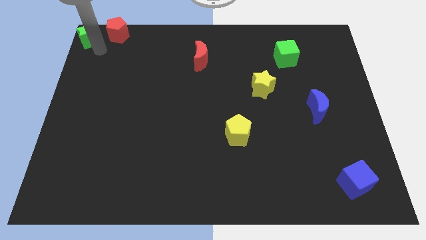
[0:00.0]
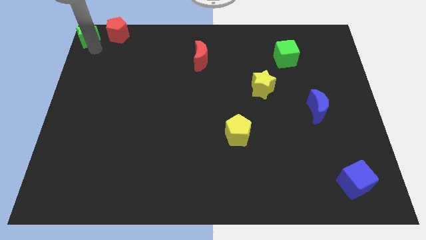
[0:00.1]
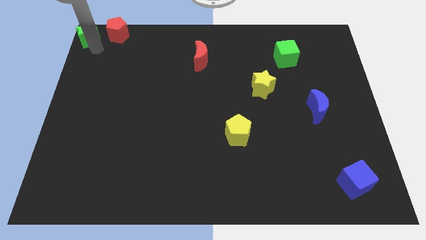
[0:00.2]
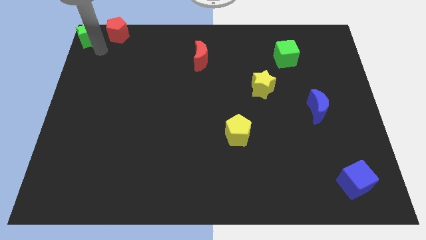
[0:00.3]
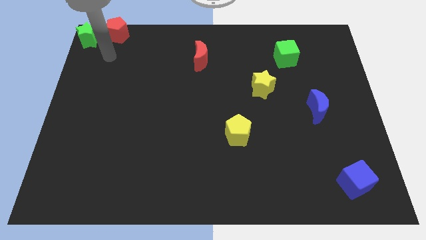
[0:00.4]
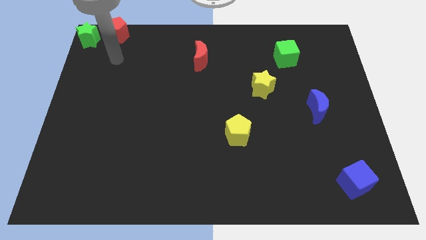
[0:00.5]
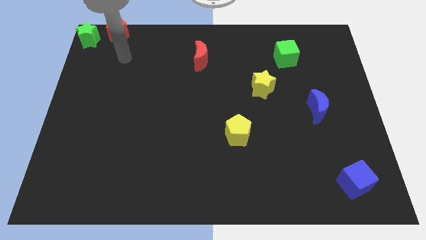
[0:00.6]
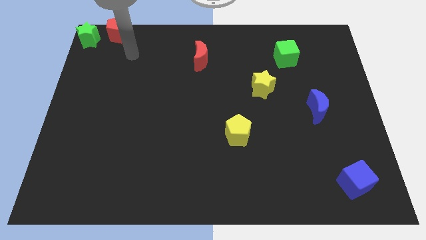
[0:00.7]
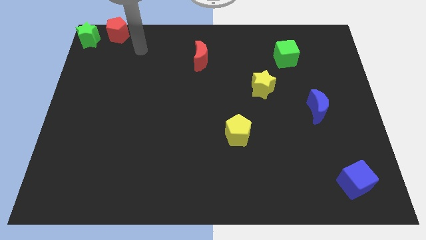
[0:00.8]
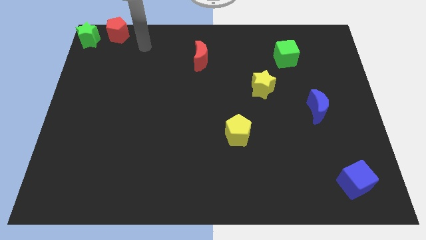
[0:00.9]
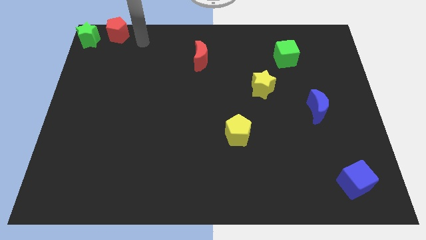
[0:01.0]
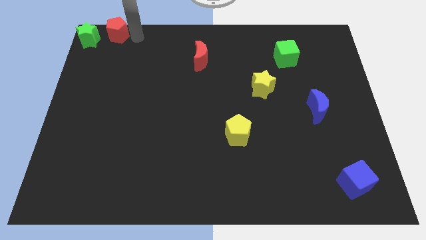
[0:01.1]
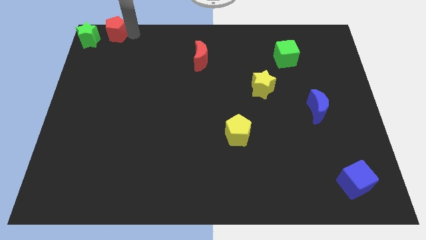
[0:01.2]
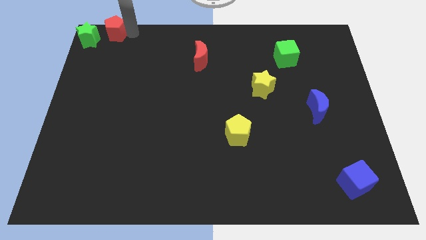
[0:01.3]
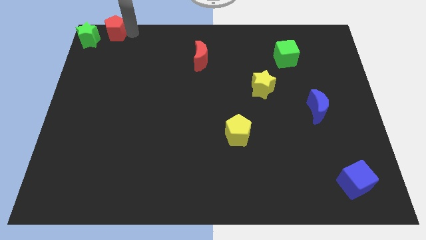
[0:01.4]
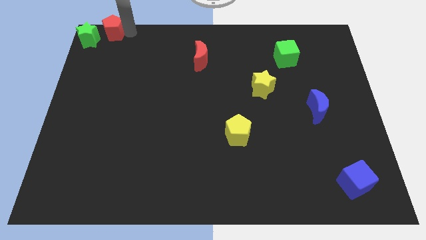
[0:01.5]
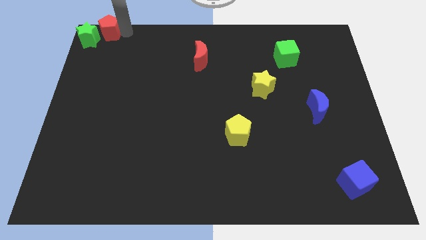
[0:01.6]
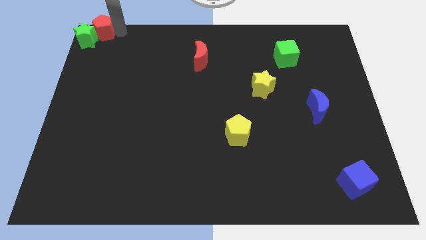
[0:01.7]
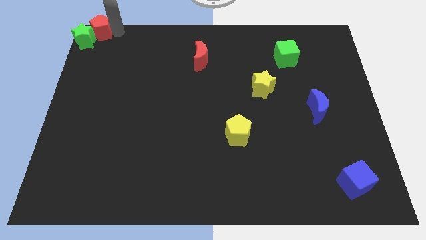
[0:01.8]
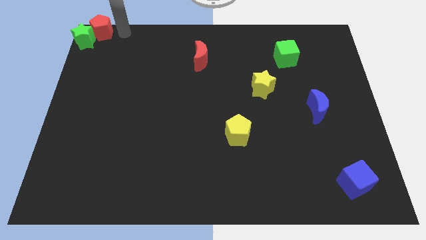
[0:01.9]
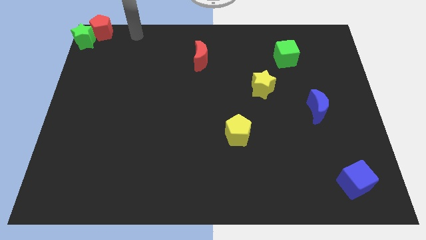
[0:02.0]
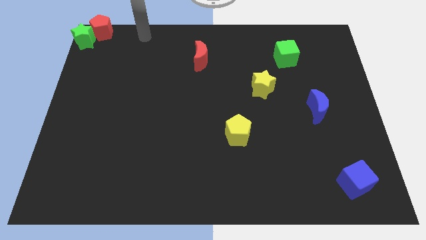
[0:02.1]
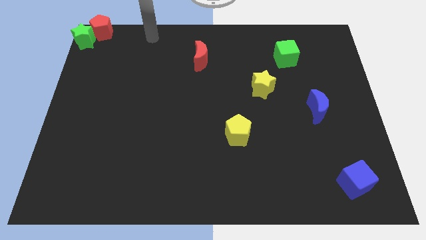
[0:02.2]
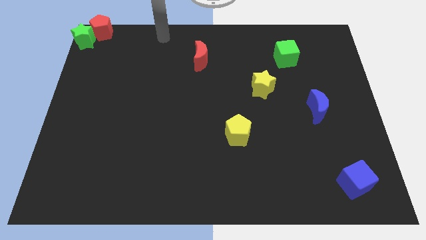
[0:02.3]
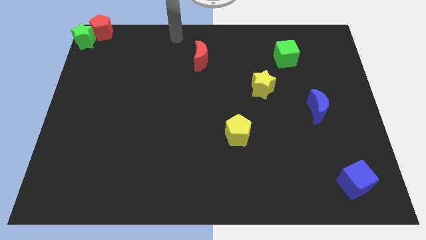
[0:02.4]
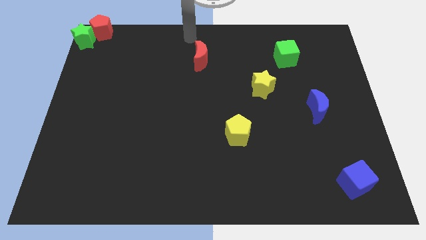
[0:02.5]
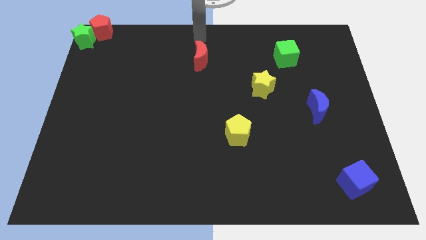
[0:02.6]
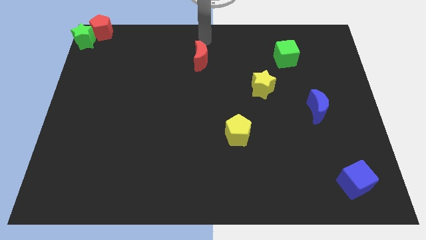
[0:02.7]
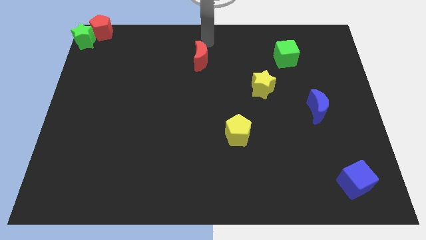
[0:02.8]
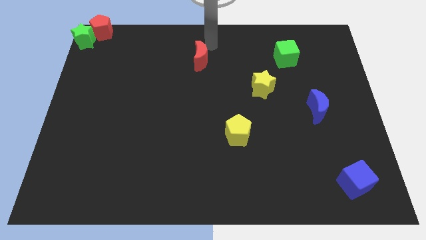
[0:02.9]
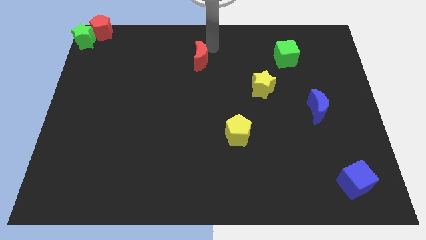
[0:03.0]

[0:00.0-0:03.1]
move your arm towards the red crescent

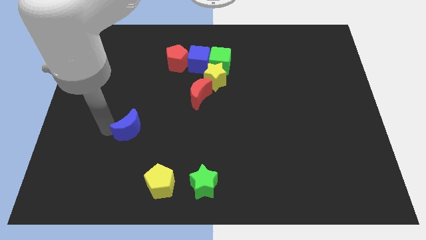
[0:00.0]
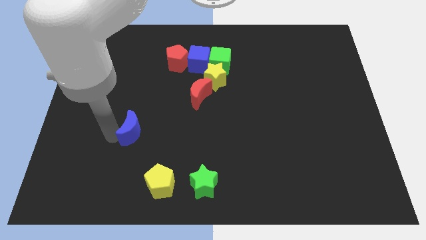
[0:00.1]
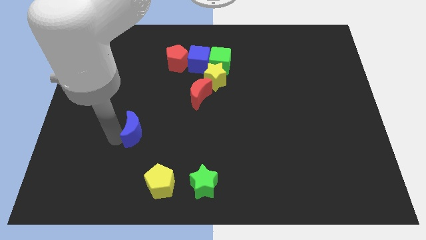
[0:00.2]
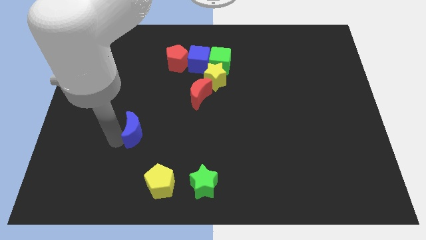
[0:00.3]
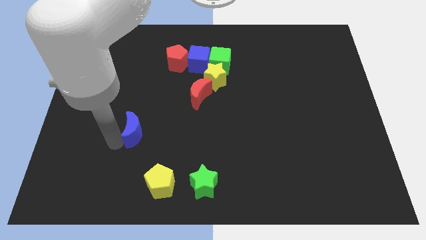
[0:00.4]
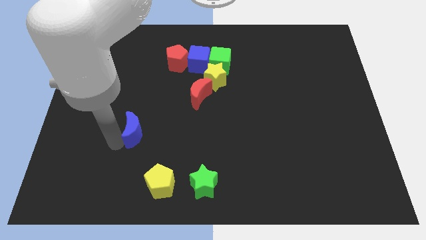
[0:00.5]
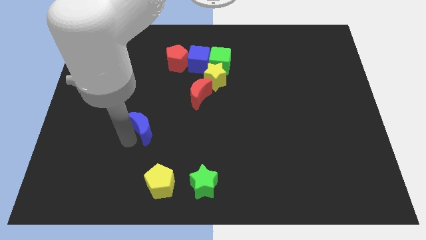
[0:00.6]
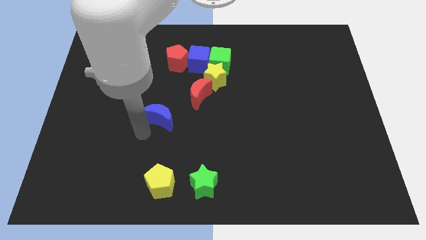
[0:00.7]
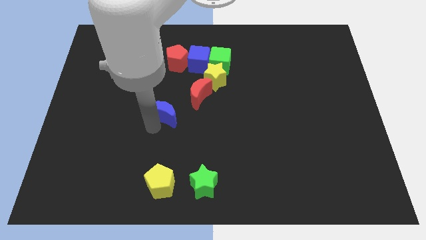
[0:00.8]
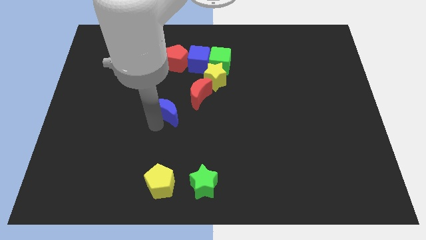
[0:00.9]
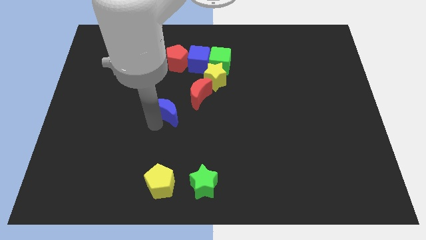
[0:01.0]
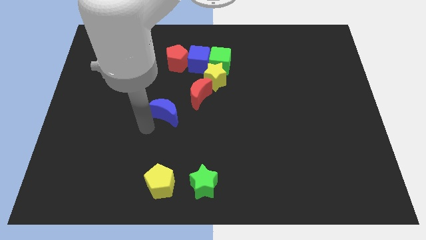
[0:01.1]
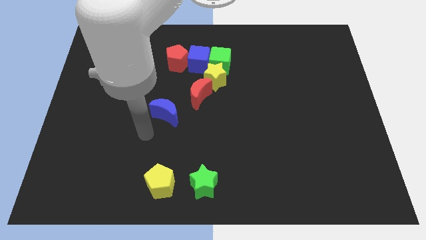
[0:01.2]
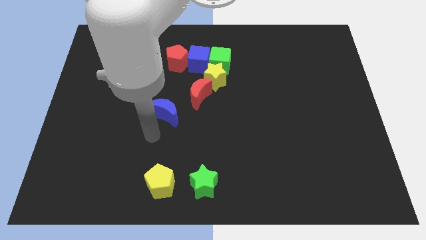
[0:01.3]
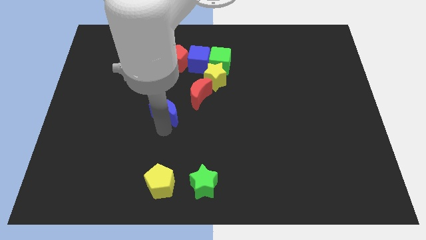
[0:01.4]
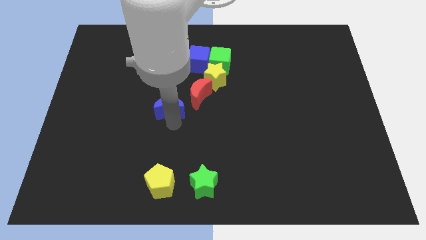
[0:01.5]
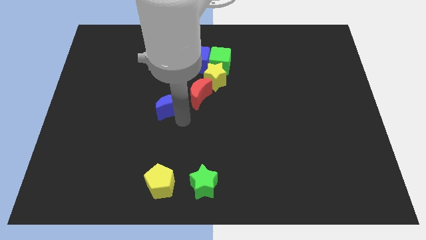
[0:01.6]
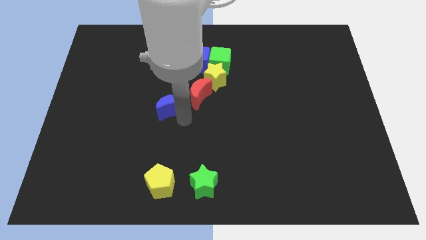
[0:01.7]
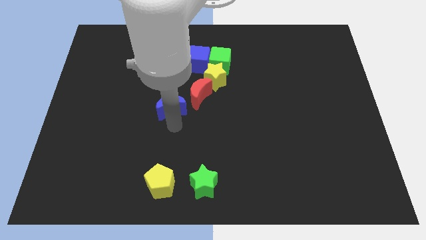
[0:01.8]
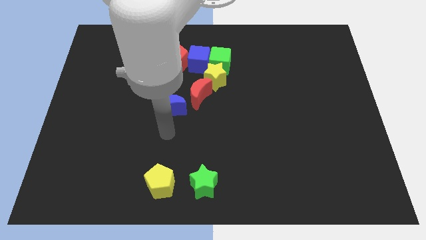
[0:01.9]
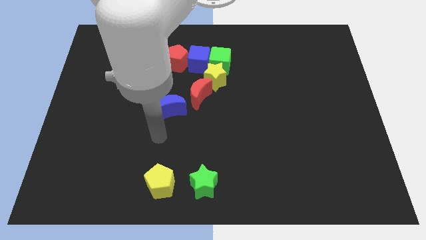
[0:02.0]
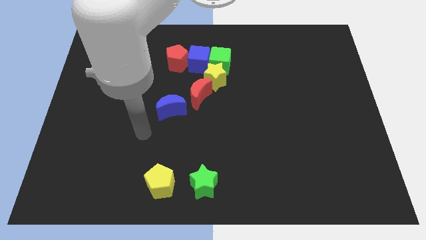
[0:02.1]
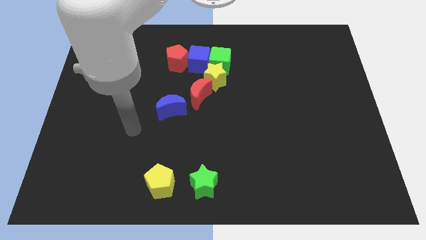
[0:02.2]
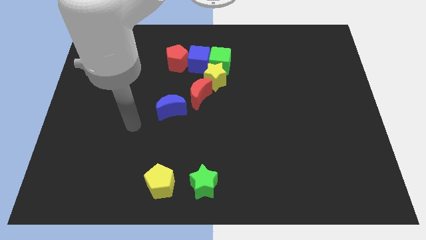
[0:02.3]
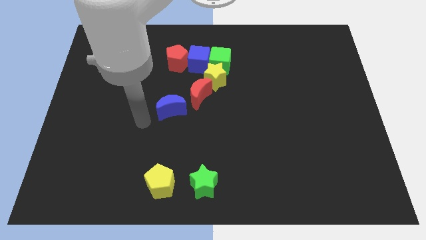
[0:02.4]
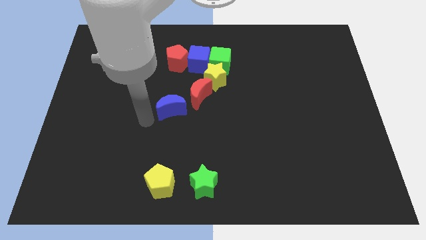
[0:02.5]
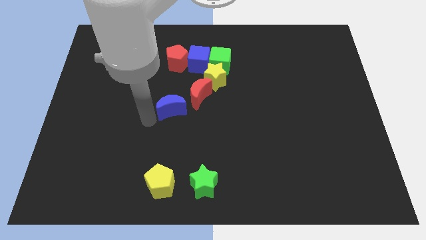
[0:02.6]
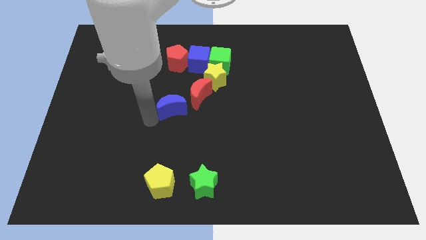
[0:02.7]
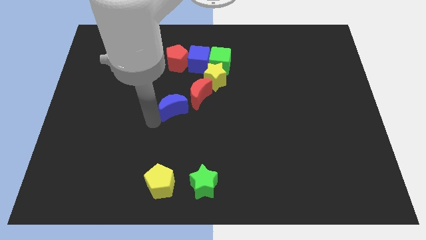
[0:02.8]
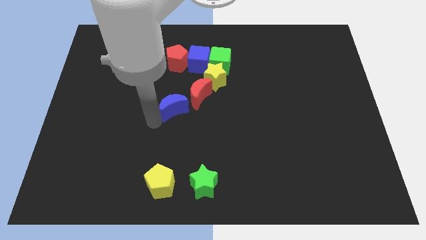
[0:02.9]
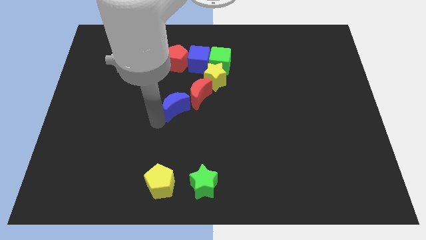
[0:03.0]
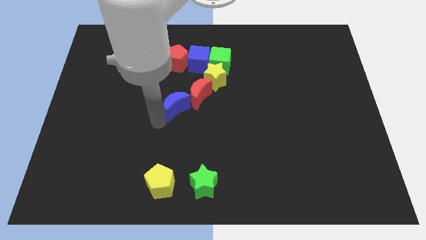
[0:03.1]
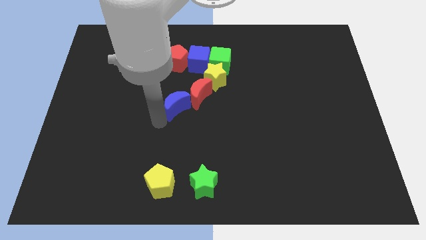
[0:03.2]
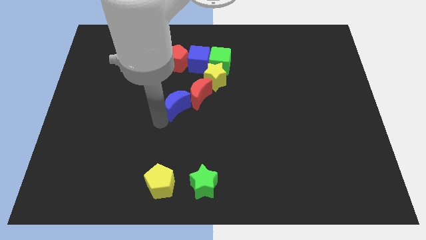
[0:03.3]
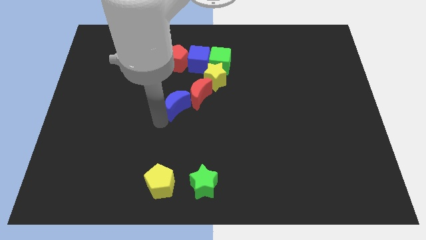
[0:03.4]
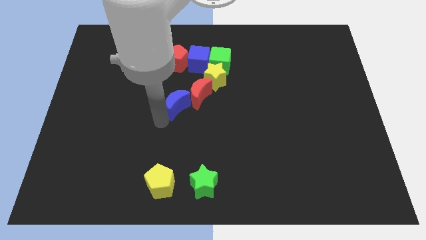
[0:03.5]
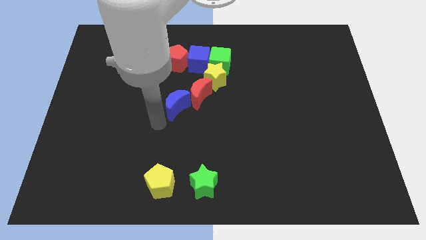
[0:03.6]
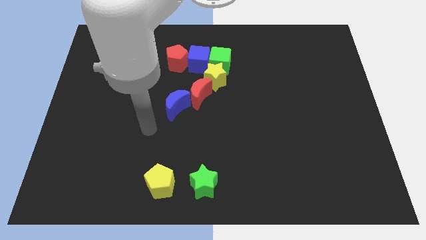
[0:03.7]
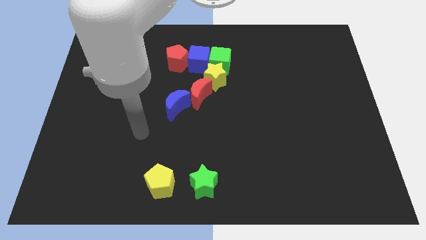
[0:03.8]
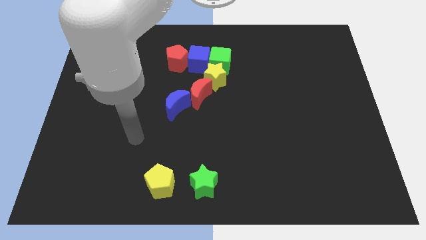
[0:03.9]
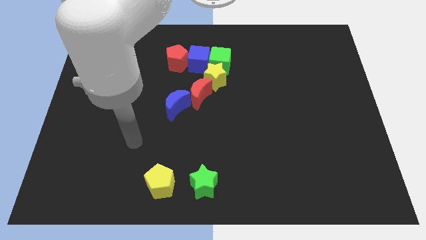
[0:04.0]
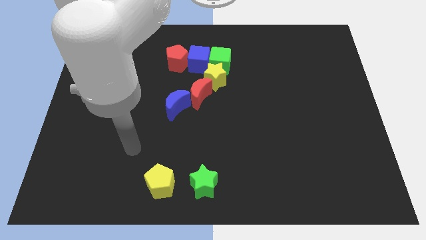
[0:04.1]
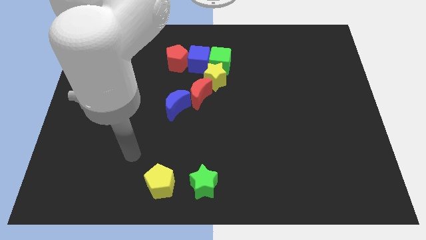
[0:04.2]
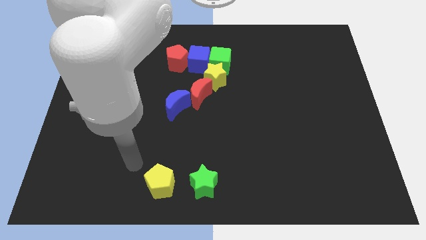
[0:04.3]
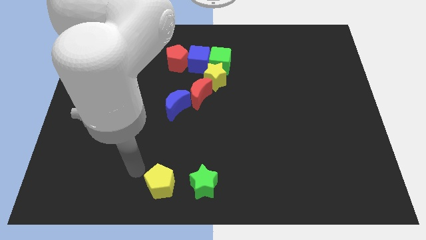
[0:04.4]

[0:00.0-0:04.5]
place the blue crescent to the bottom left side of the red crescent

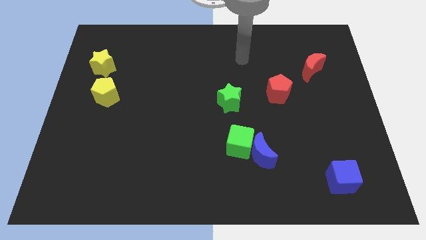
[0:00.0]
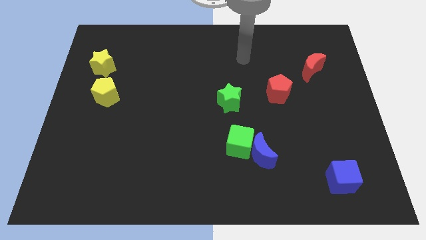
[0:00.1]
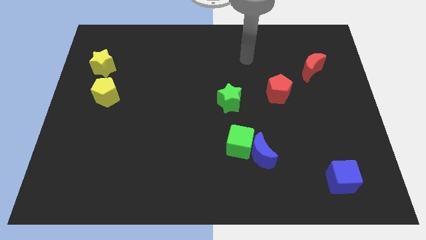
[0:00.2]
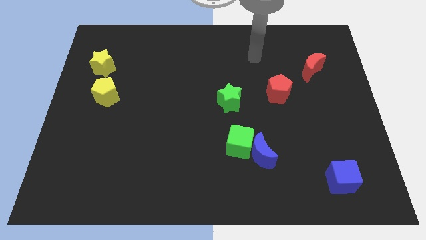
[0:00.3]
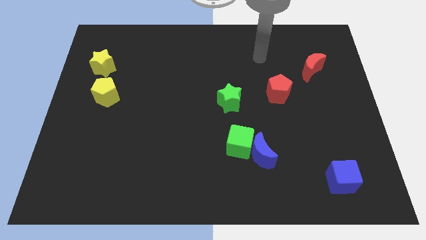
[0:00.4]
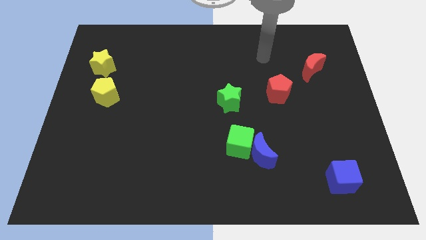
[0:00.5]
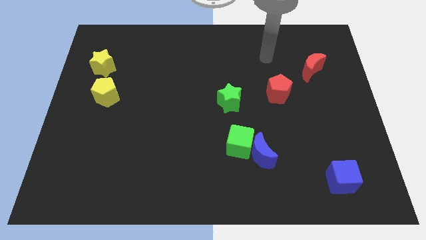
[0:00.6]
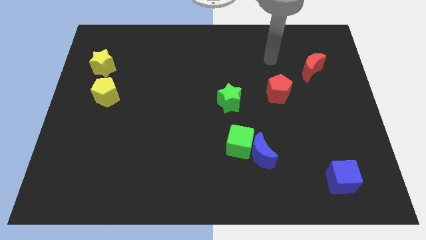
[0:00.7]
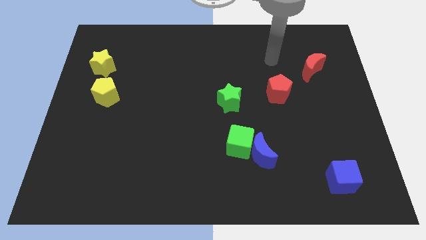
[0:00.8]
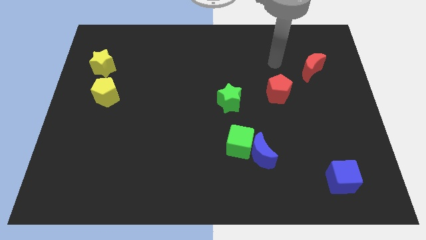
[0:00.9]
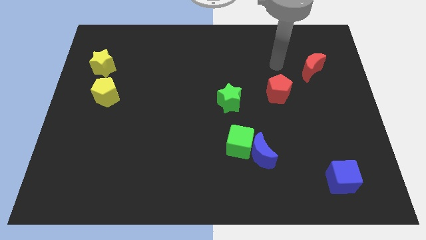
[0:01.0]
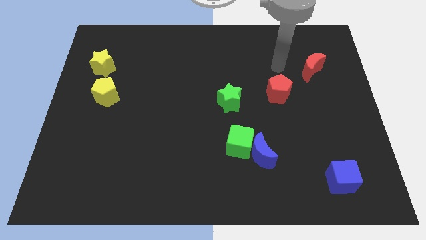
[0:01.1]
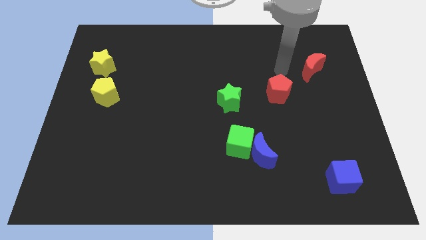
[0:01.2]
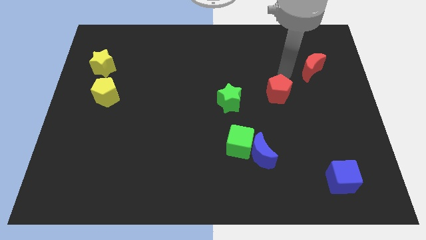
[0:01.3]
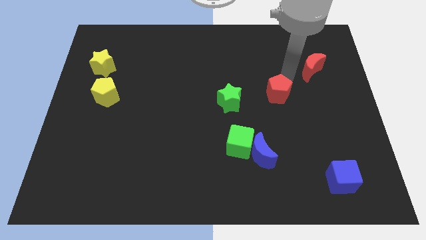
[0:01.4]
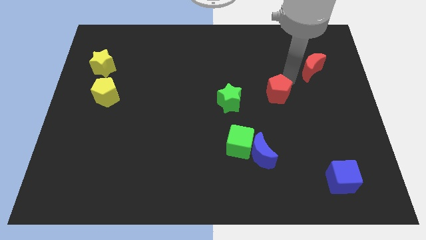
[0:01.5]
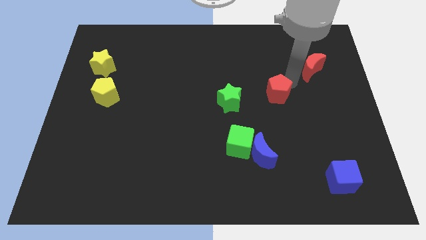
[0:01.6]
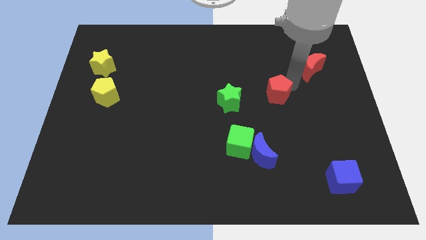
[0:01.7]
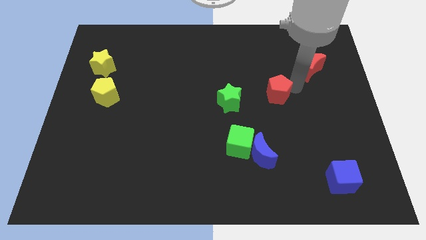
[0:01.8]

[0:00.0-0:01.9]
place your arm in between the red pentagon and red crescent
